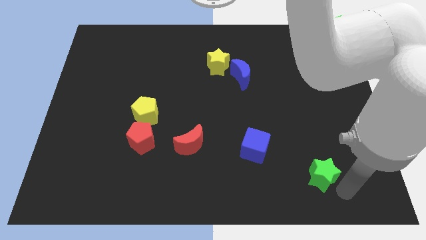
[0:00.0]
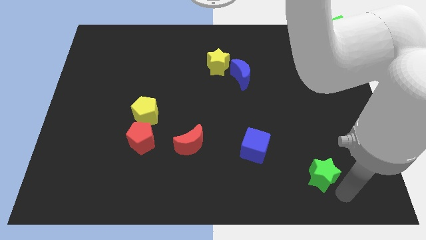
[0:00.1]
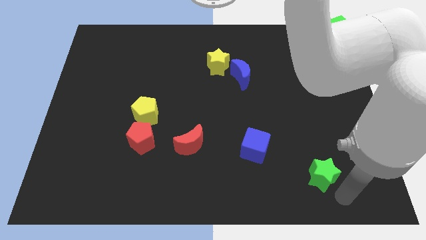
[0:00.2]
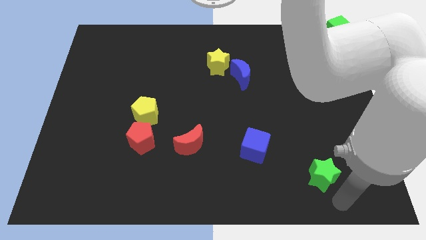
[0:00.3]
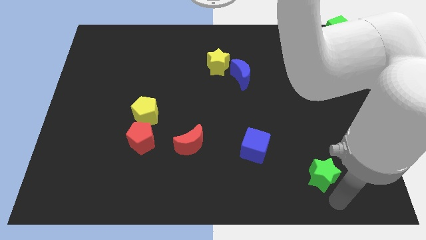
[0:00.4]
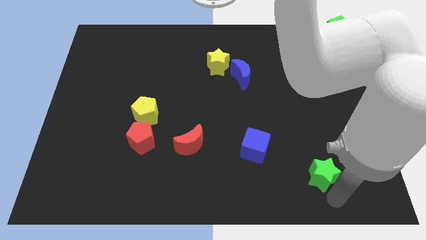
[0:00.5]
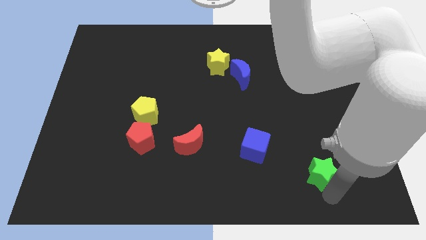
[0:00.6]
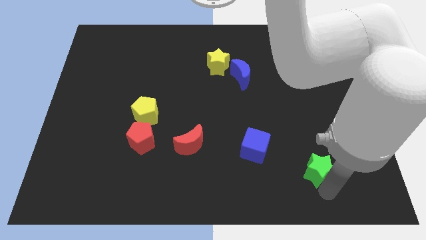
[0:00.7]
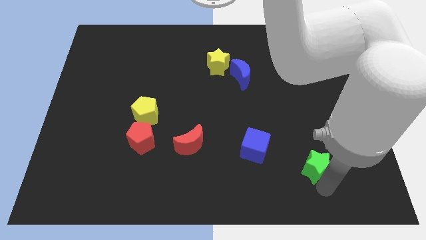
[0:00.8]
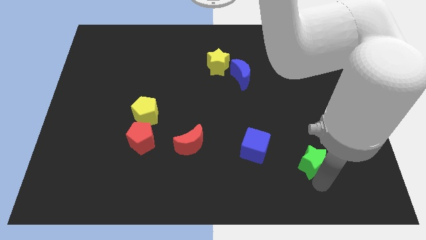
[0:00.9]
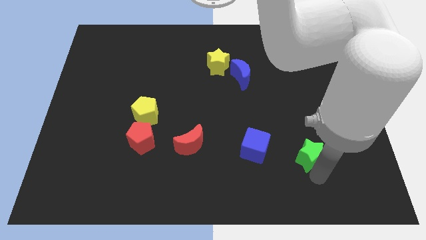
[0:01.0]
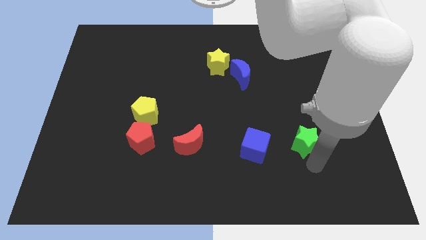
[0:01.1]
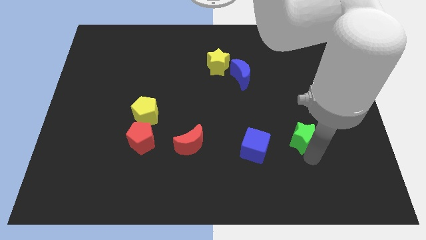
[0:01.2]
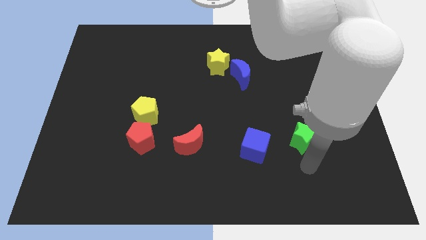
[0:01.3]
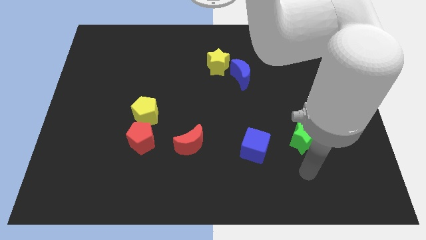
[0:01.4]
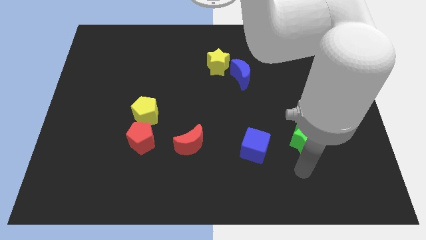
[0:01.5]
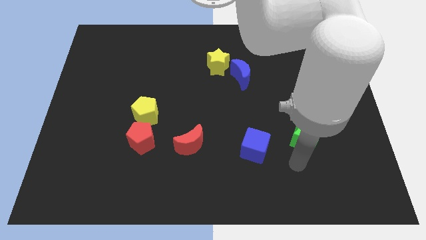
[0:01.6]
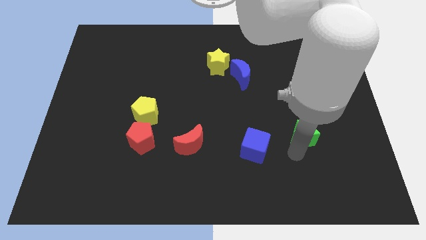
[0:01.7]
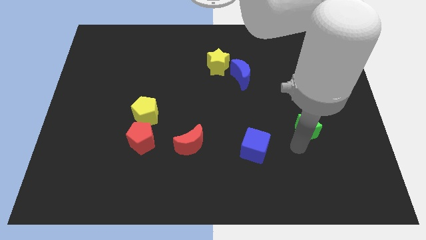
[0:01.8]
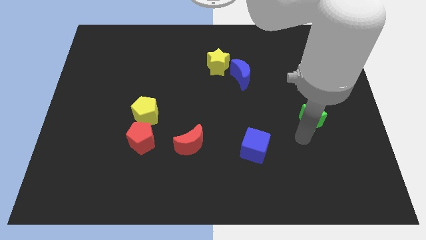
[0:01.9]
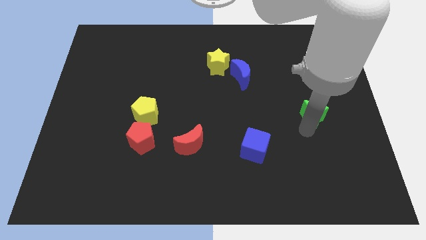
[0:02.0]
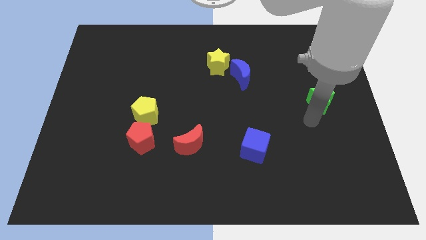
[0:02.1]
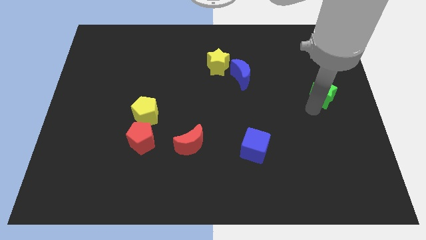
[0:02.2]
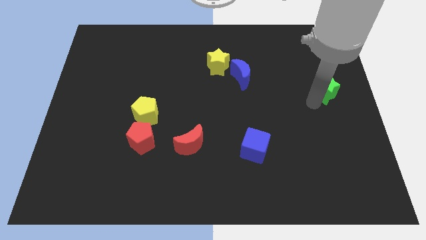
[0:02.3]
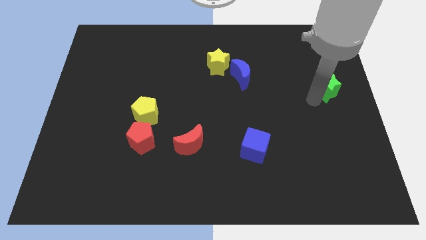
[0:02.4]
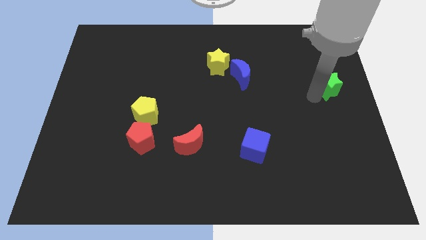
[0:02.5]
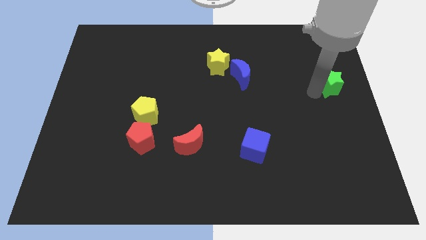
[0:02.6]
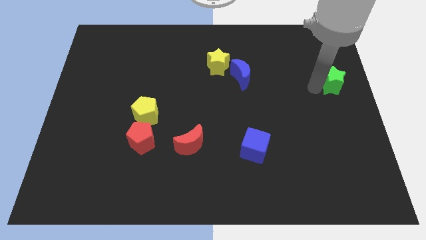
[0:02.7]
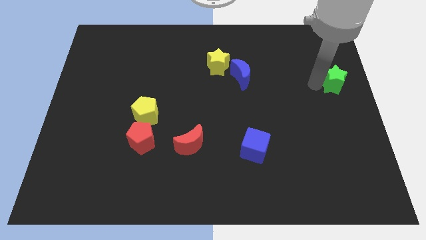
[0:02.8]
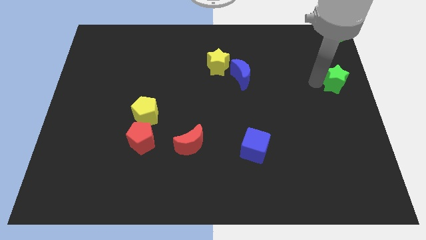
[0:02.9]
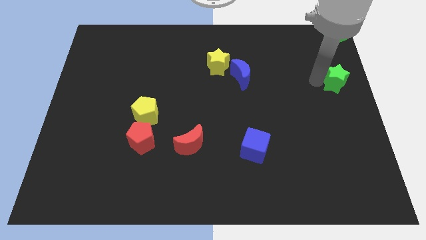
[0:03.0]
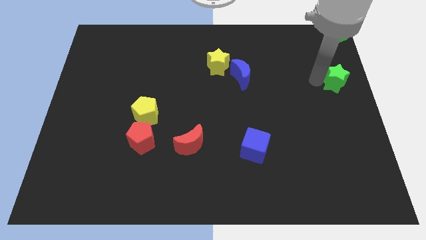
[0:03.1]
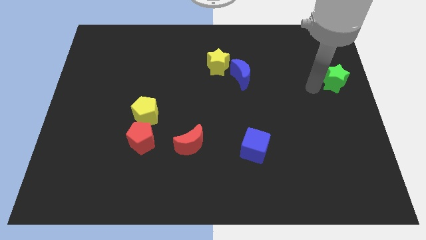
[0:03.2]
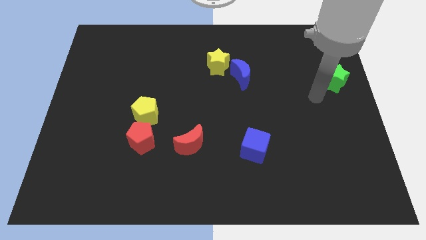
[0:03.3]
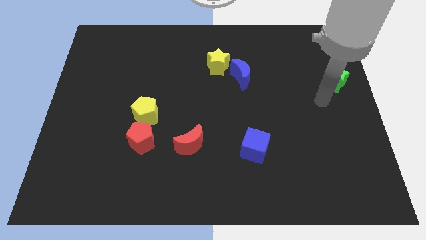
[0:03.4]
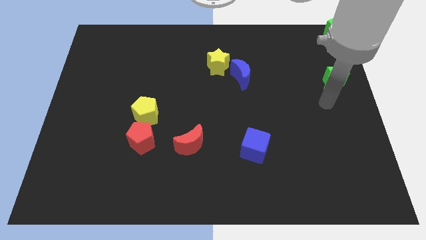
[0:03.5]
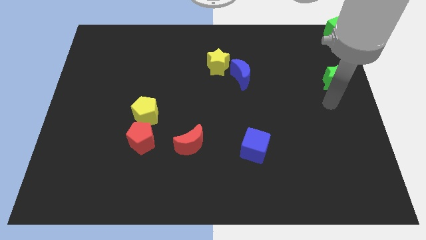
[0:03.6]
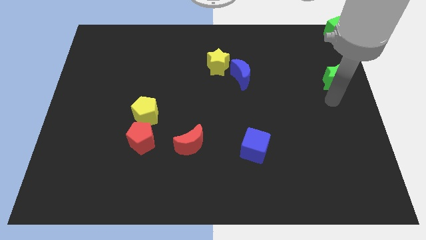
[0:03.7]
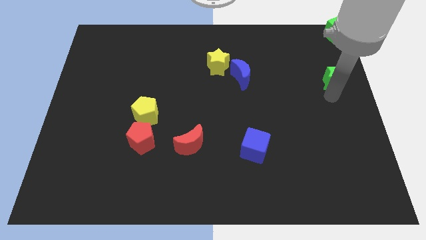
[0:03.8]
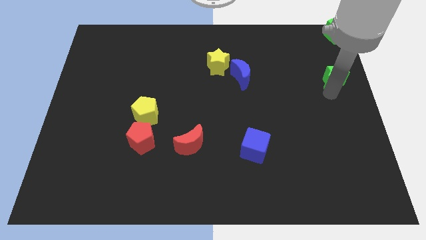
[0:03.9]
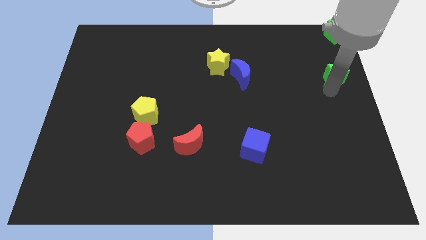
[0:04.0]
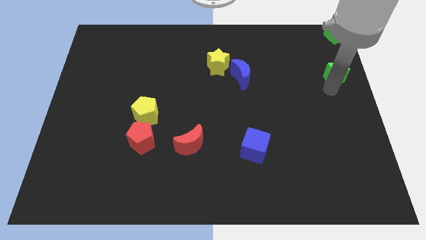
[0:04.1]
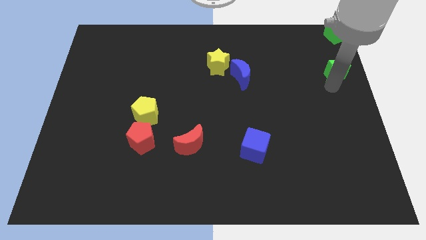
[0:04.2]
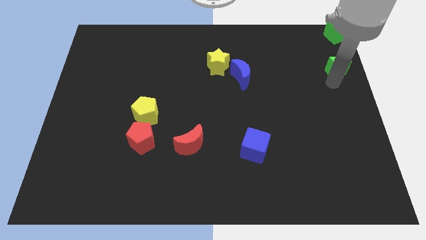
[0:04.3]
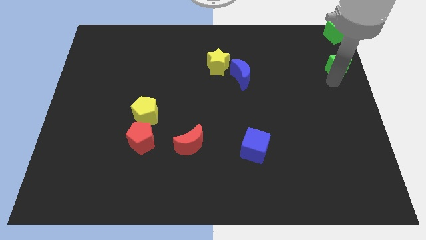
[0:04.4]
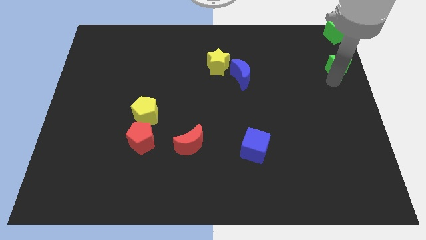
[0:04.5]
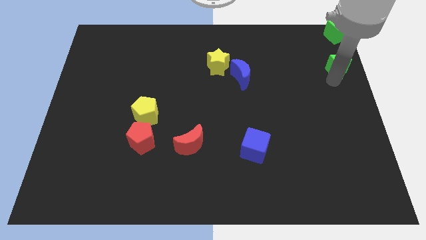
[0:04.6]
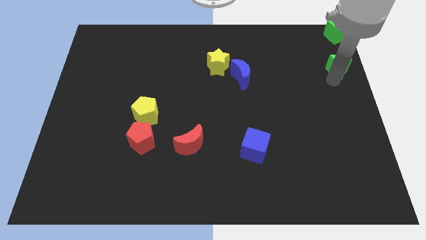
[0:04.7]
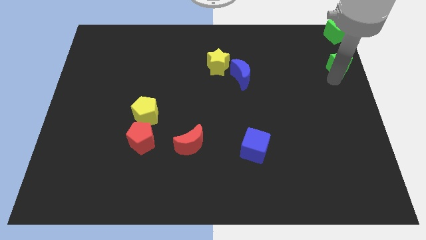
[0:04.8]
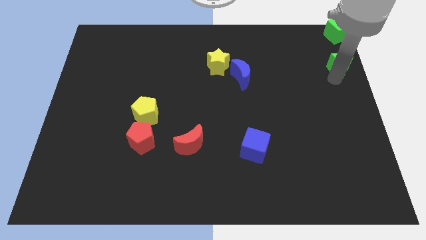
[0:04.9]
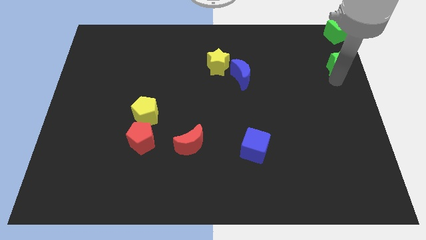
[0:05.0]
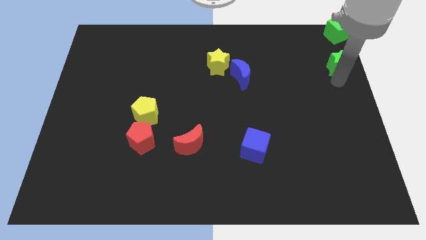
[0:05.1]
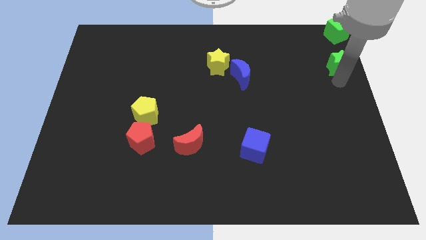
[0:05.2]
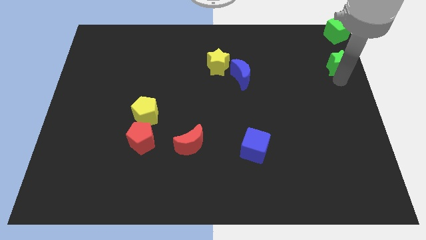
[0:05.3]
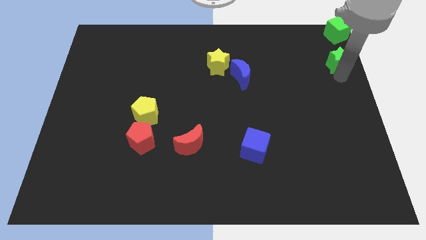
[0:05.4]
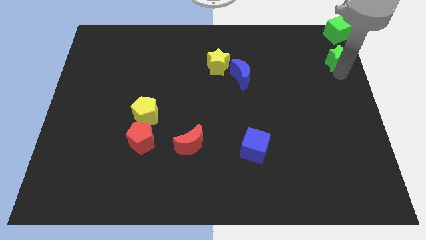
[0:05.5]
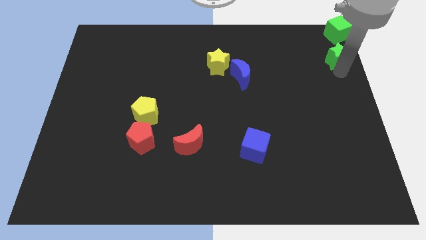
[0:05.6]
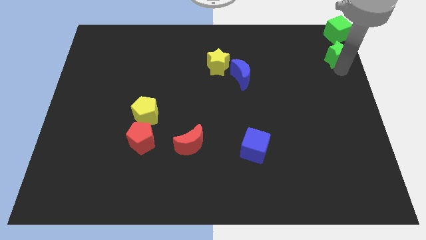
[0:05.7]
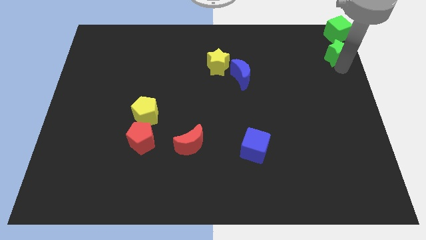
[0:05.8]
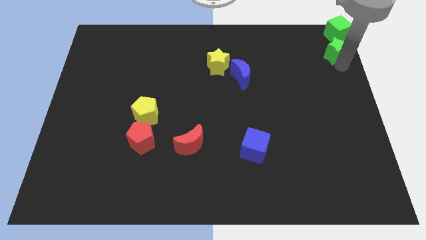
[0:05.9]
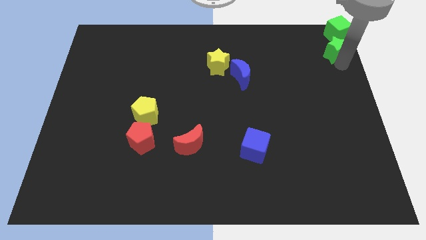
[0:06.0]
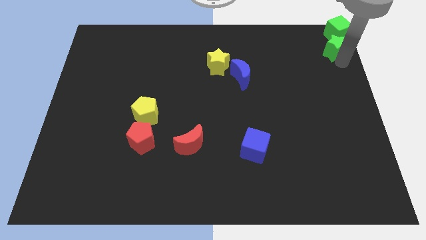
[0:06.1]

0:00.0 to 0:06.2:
place the green star to the bottom of the green cube

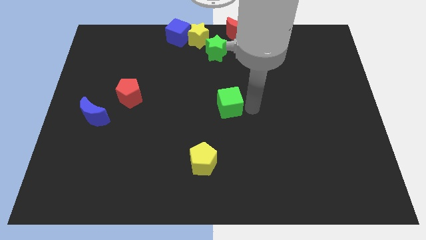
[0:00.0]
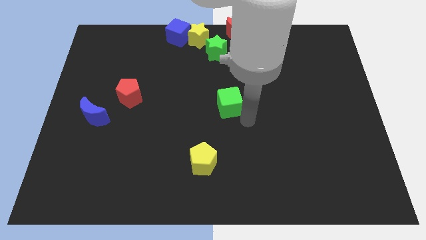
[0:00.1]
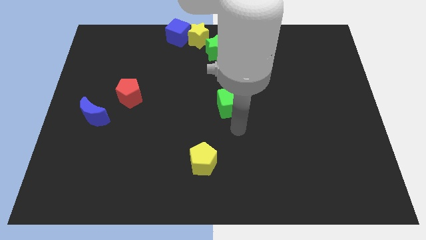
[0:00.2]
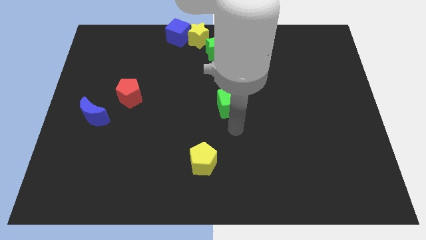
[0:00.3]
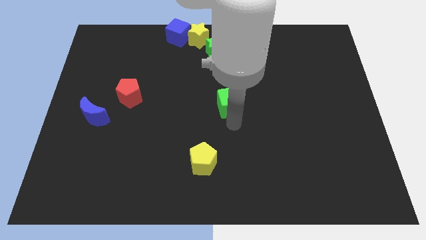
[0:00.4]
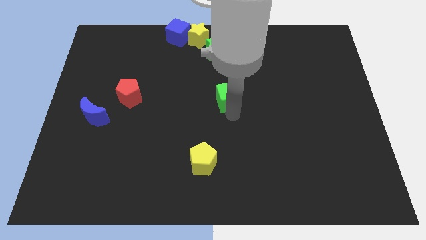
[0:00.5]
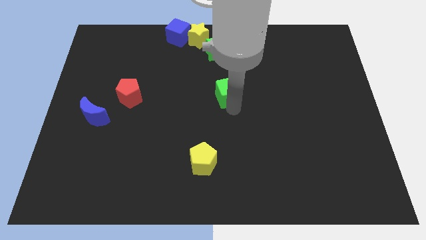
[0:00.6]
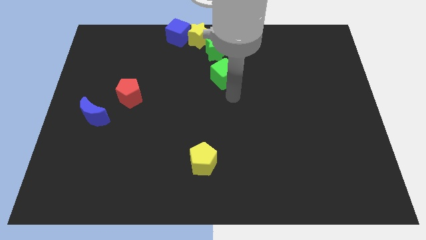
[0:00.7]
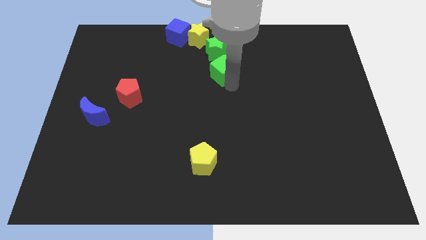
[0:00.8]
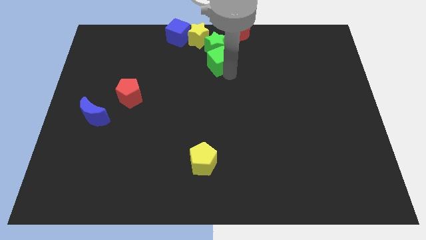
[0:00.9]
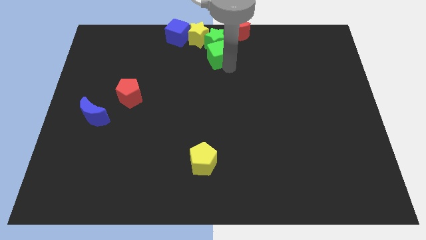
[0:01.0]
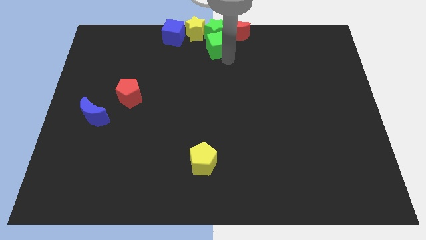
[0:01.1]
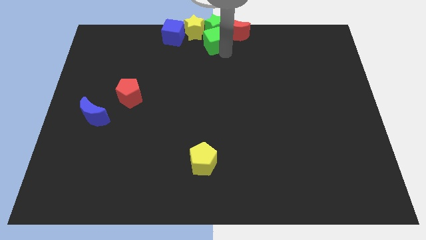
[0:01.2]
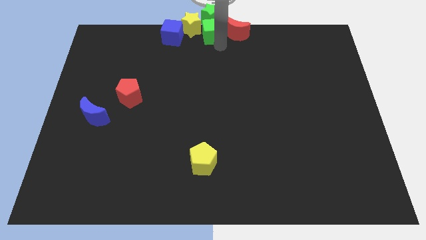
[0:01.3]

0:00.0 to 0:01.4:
move green block and green star to the top center of the board

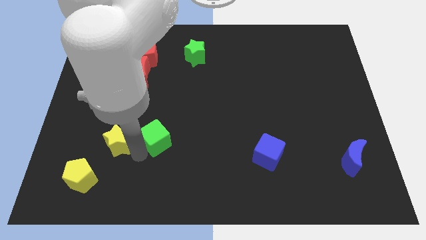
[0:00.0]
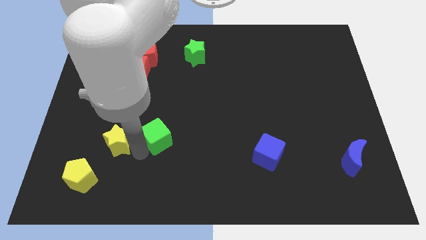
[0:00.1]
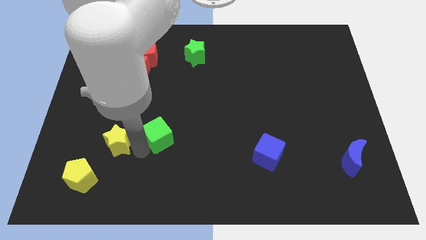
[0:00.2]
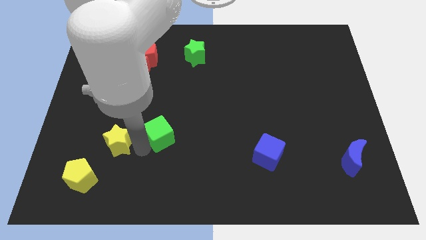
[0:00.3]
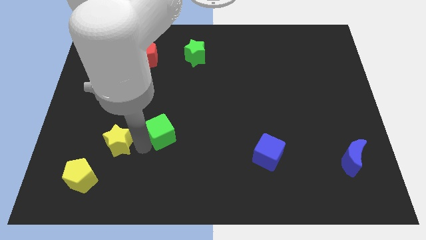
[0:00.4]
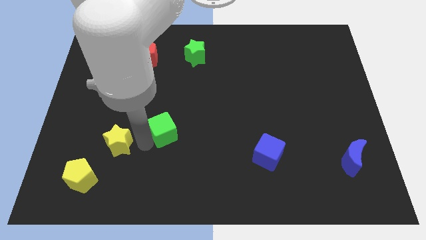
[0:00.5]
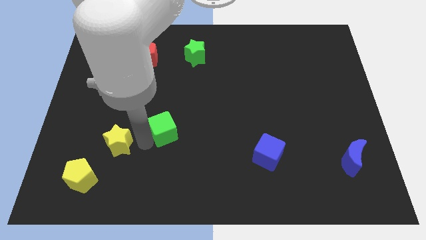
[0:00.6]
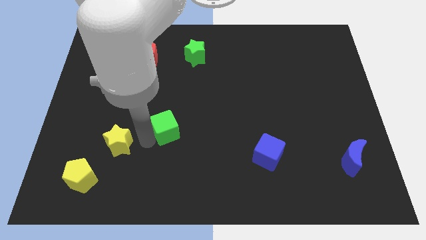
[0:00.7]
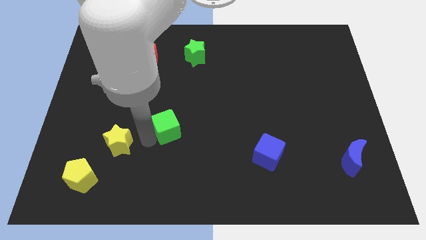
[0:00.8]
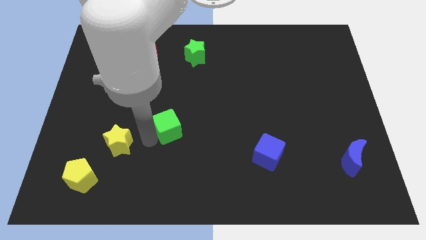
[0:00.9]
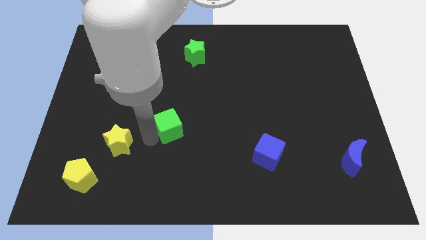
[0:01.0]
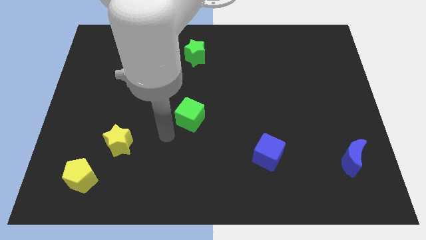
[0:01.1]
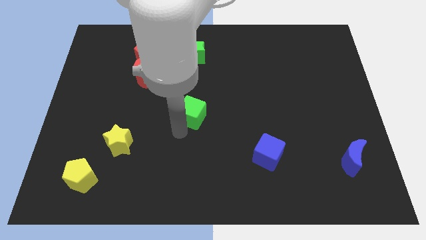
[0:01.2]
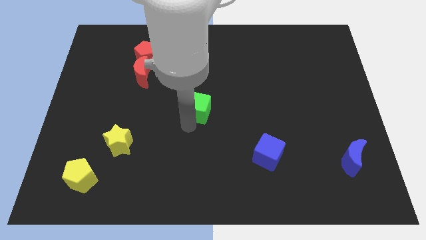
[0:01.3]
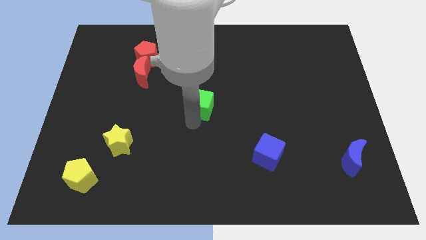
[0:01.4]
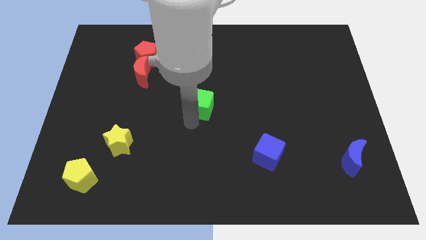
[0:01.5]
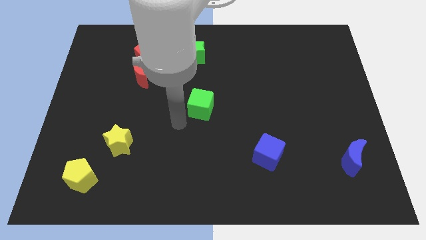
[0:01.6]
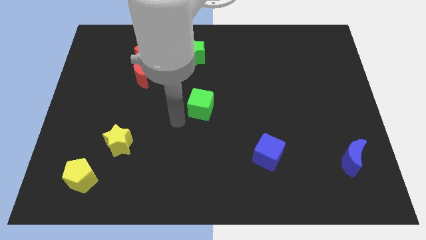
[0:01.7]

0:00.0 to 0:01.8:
put the green cube at the center of the board
